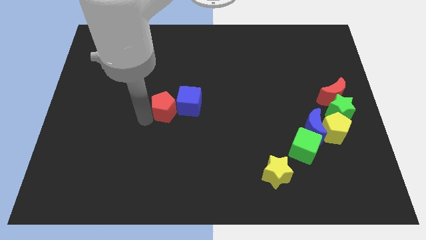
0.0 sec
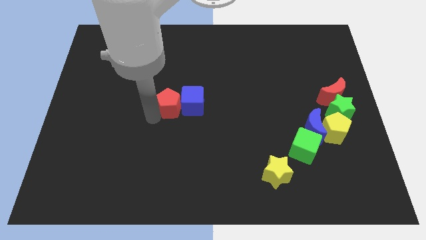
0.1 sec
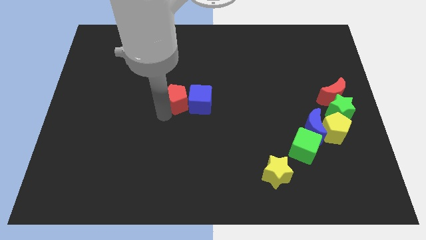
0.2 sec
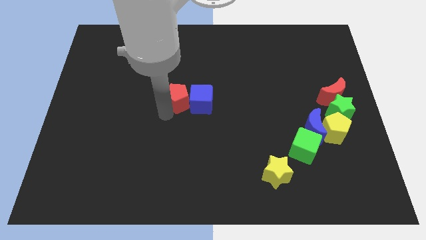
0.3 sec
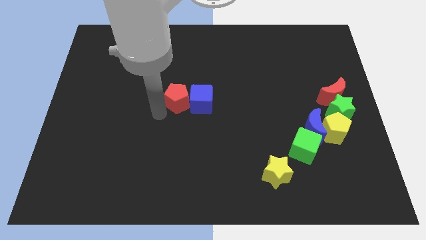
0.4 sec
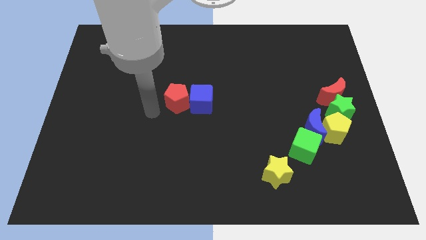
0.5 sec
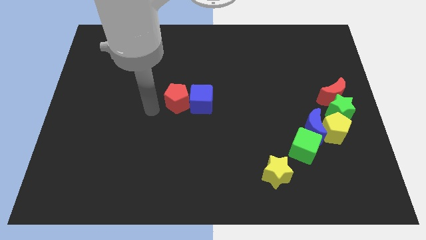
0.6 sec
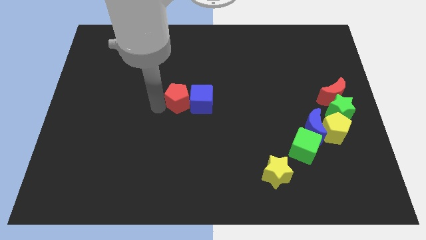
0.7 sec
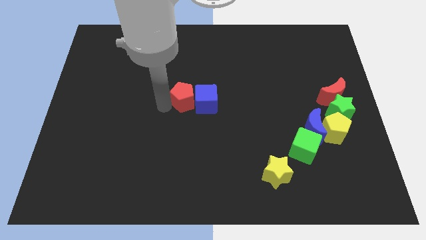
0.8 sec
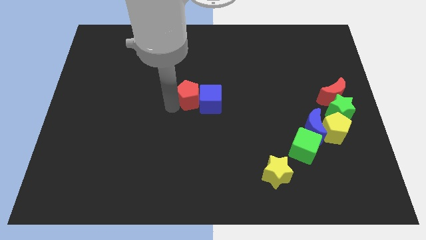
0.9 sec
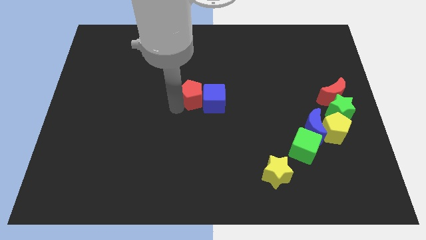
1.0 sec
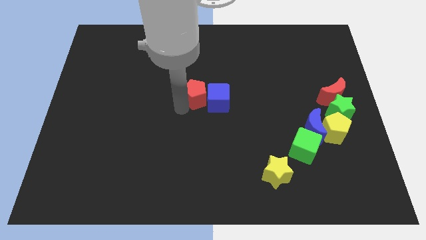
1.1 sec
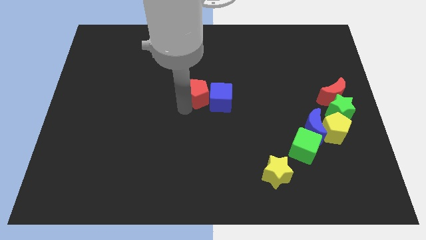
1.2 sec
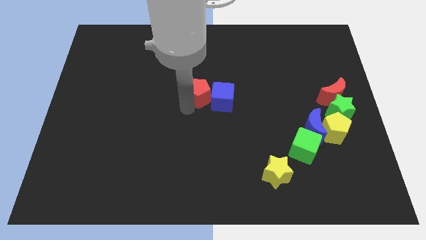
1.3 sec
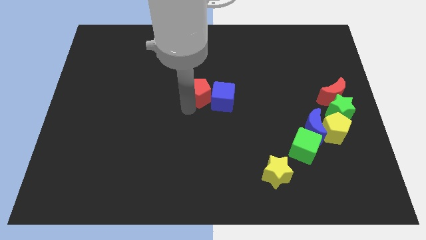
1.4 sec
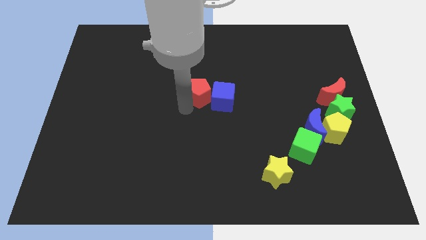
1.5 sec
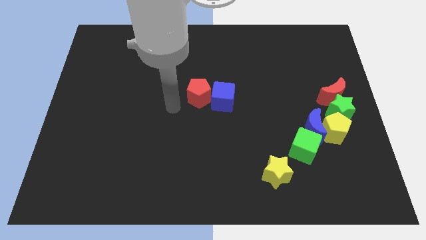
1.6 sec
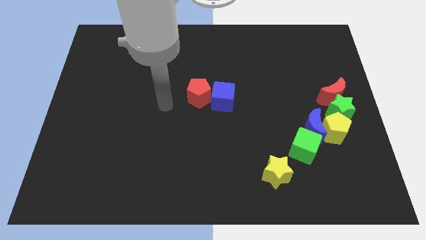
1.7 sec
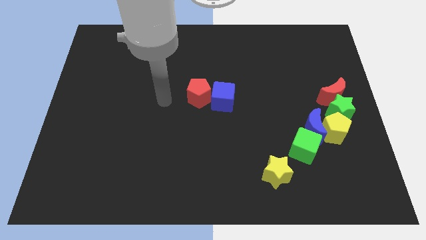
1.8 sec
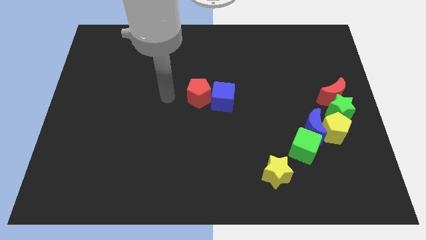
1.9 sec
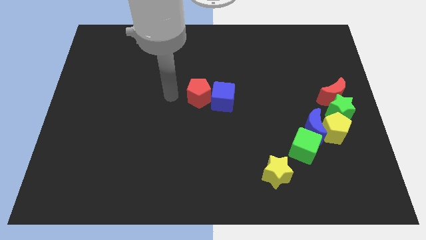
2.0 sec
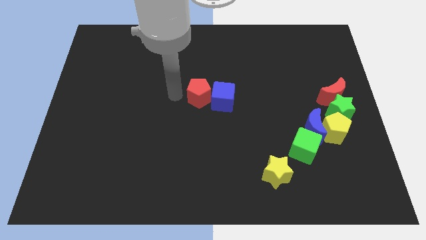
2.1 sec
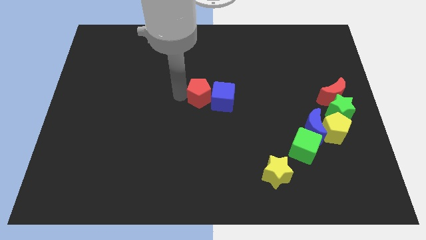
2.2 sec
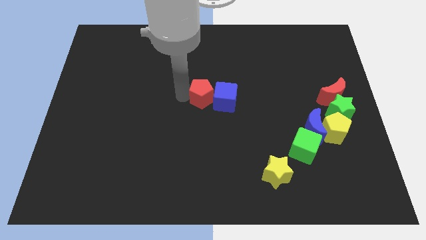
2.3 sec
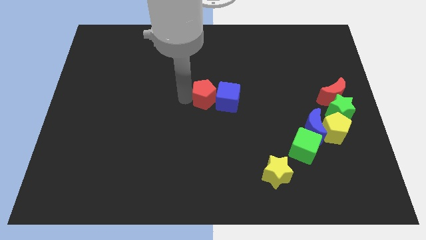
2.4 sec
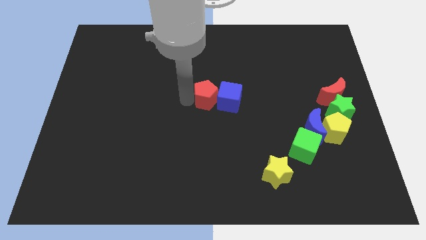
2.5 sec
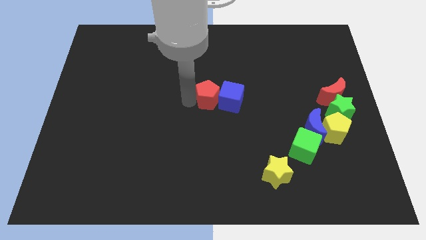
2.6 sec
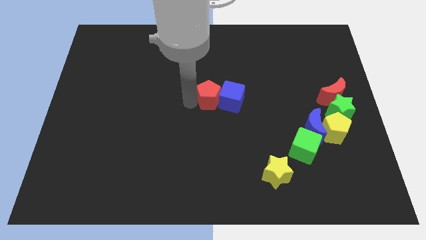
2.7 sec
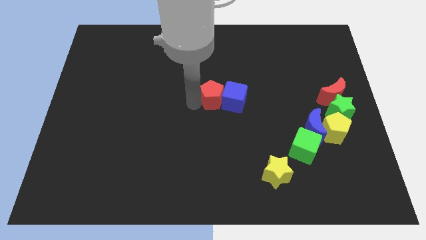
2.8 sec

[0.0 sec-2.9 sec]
move red pentagon along with blue cube to the center

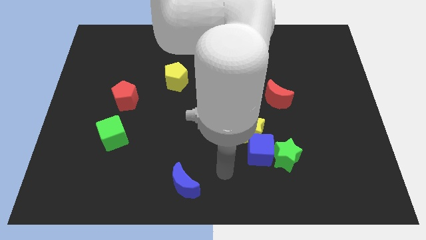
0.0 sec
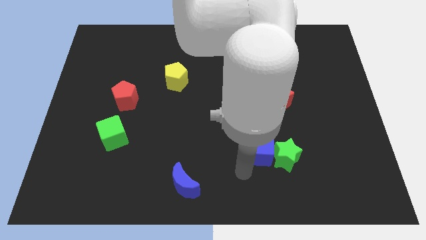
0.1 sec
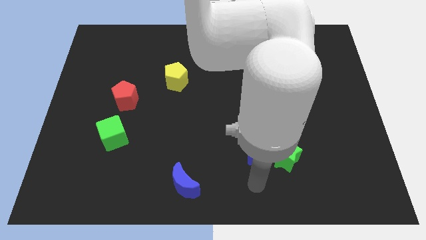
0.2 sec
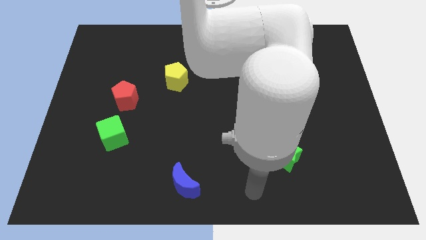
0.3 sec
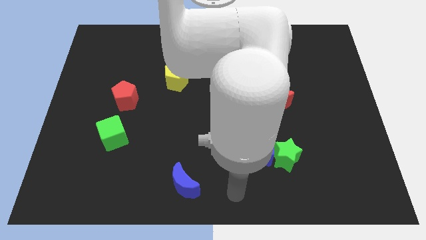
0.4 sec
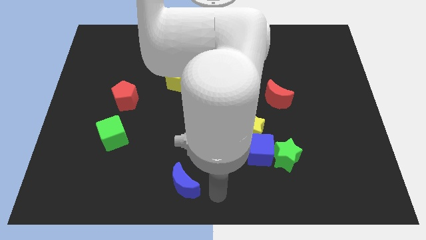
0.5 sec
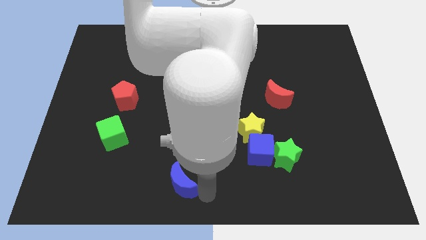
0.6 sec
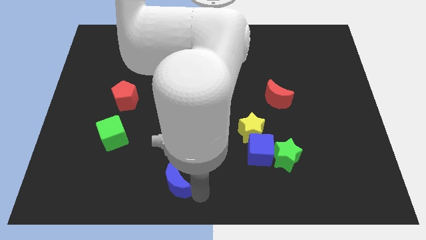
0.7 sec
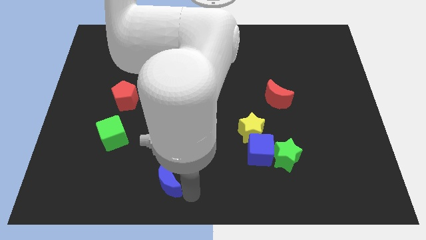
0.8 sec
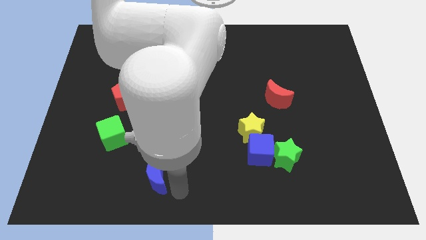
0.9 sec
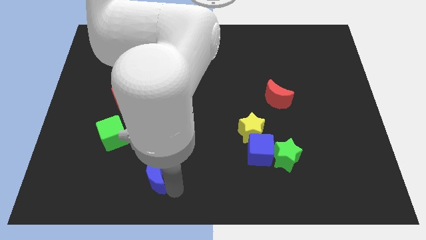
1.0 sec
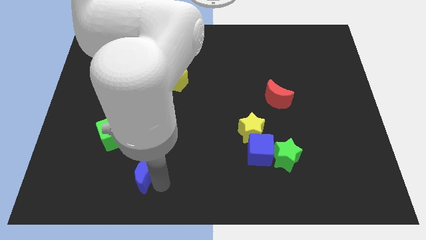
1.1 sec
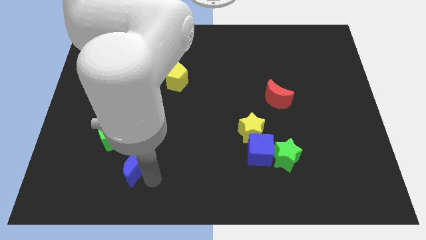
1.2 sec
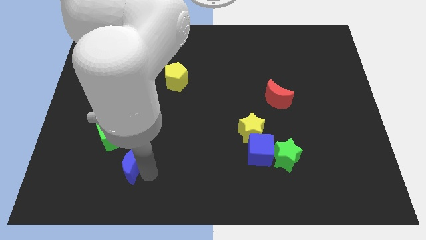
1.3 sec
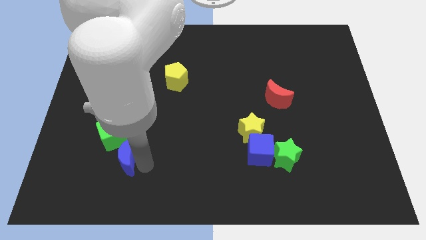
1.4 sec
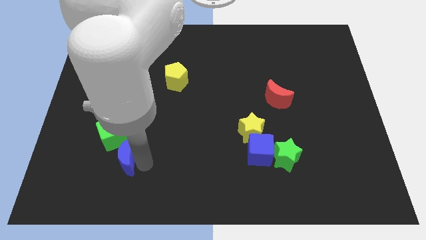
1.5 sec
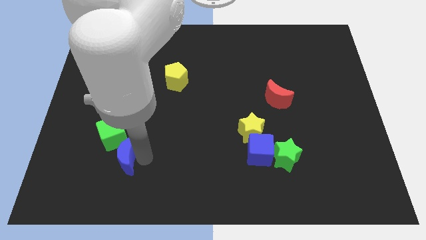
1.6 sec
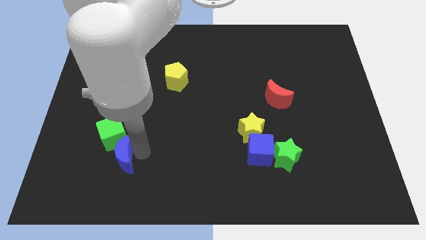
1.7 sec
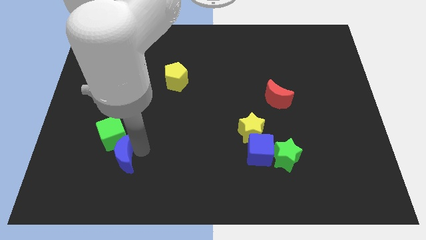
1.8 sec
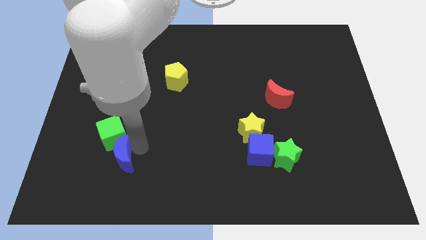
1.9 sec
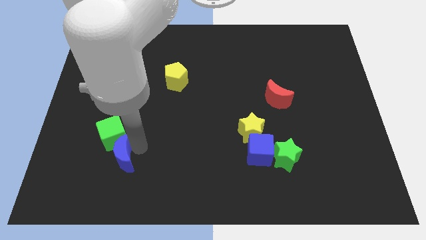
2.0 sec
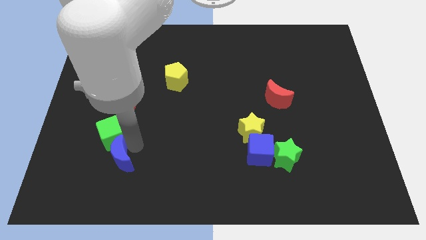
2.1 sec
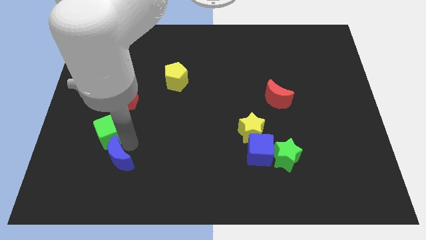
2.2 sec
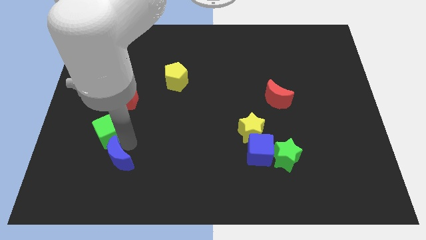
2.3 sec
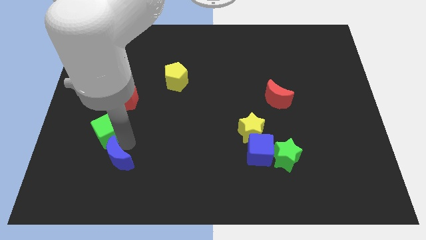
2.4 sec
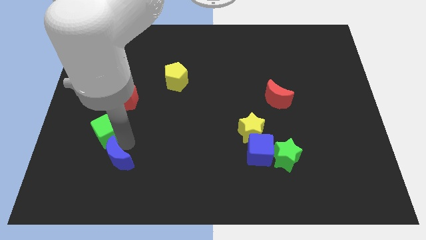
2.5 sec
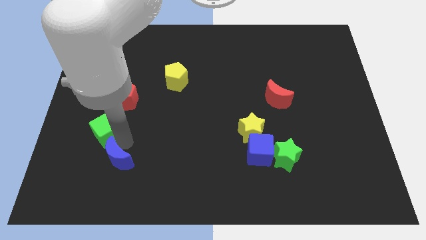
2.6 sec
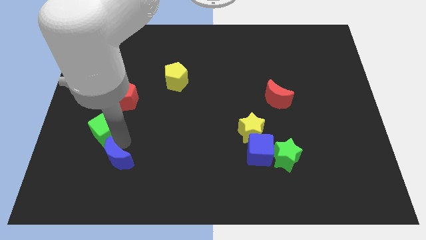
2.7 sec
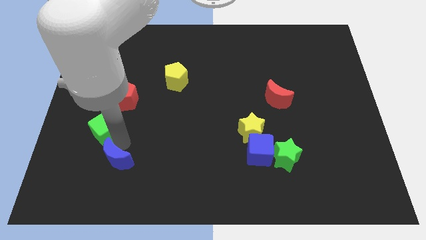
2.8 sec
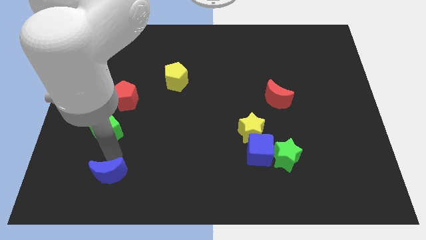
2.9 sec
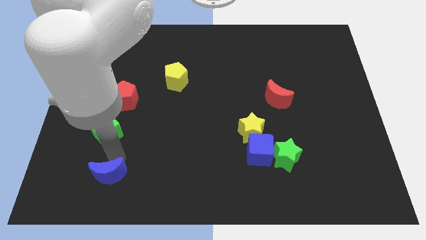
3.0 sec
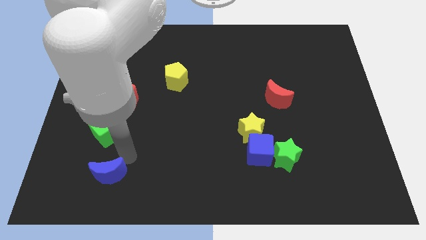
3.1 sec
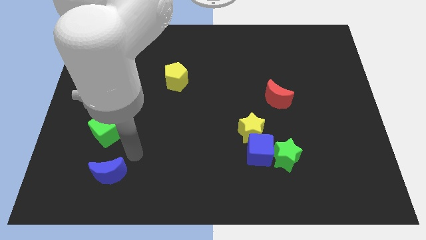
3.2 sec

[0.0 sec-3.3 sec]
push the blue crescent to the bottom of the green cube

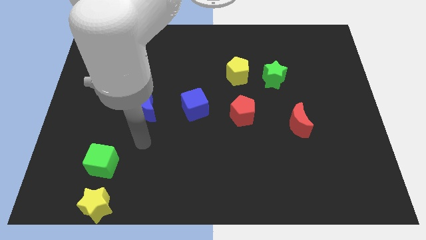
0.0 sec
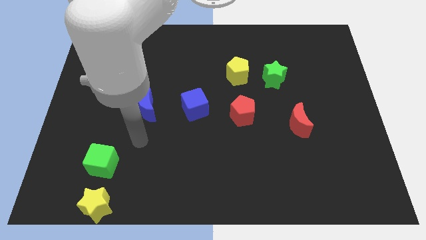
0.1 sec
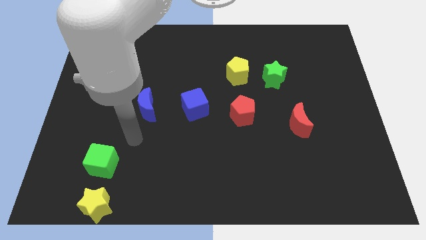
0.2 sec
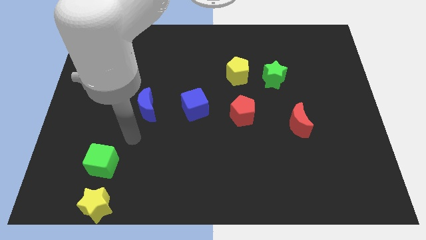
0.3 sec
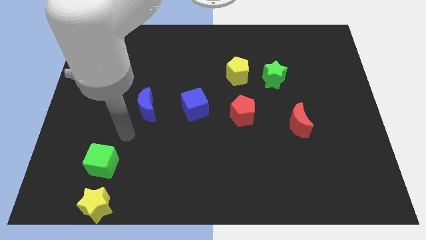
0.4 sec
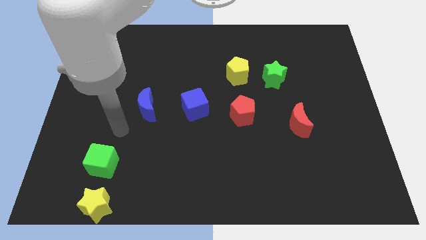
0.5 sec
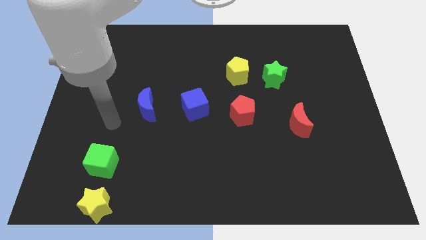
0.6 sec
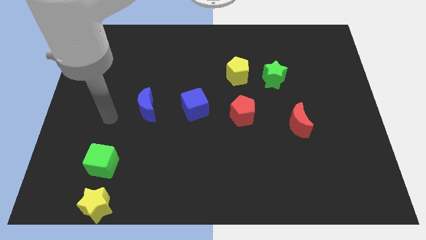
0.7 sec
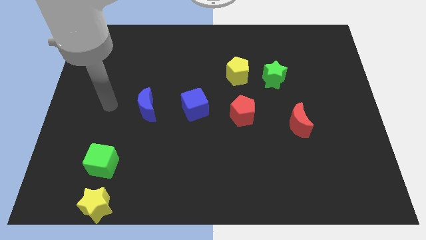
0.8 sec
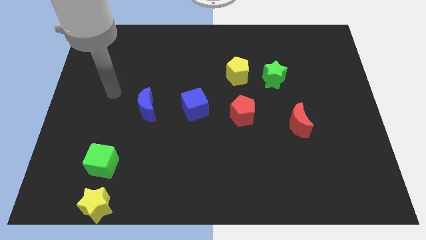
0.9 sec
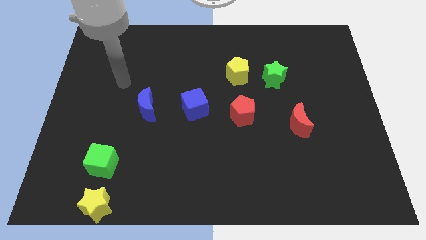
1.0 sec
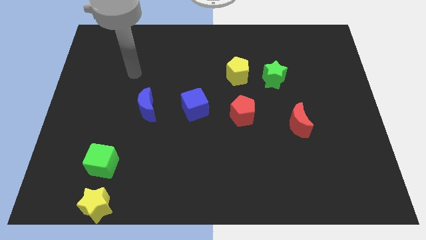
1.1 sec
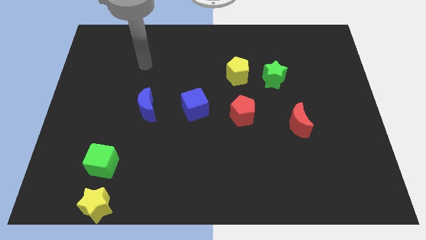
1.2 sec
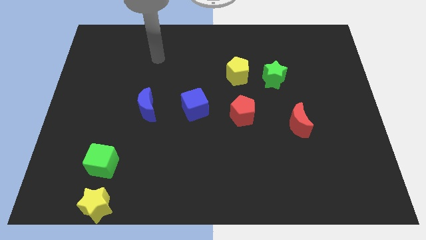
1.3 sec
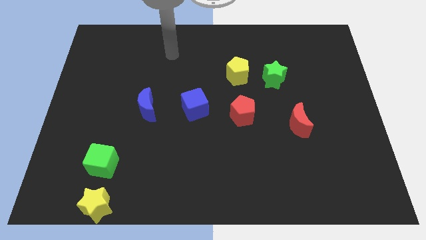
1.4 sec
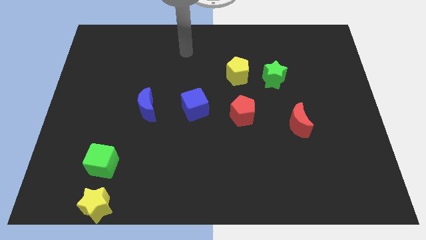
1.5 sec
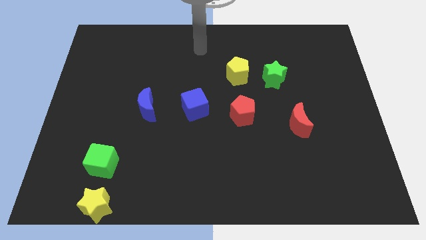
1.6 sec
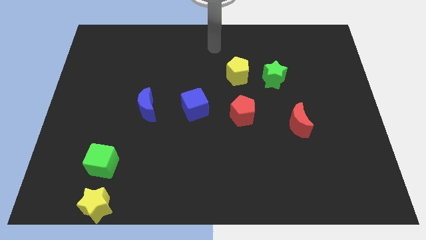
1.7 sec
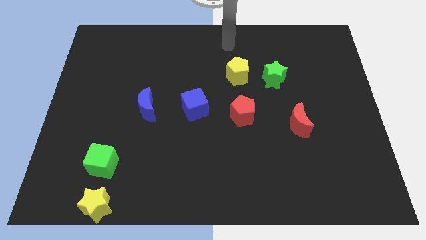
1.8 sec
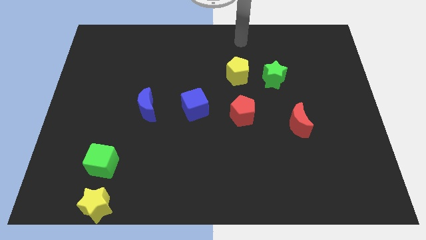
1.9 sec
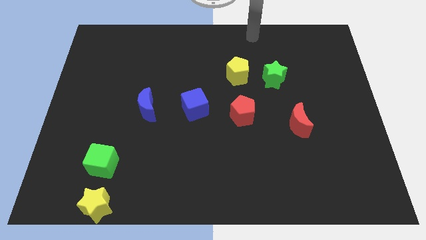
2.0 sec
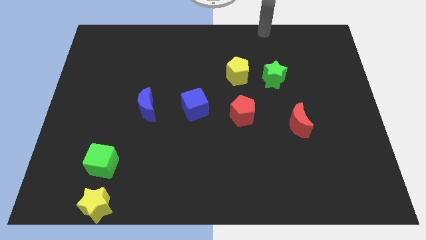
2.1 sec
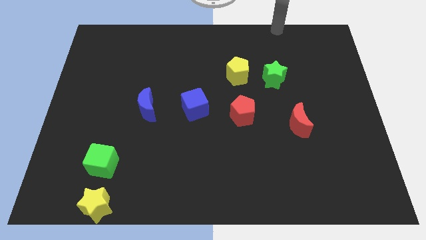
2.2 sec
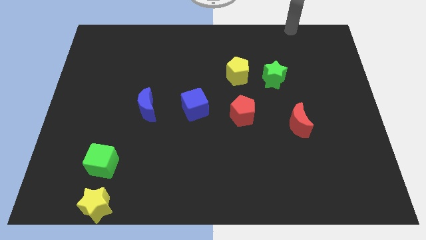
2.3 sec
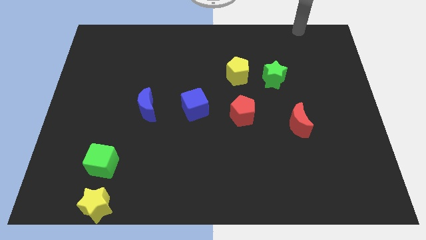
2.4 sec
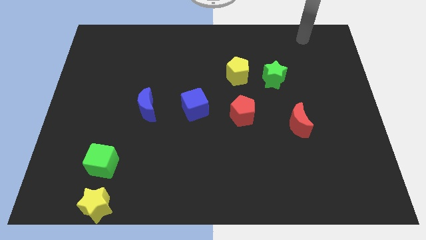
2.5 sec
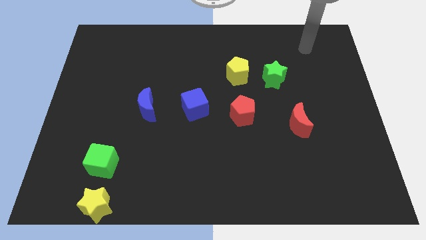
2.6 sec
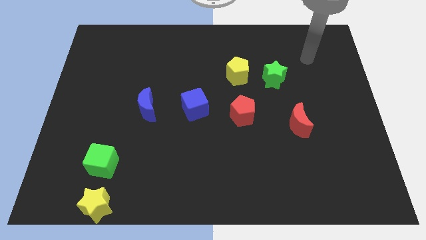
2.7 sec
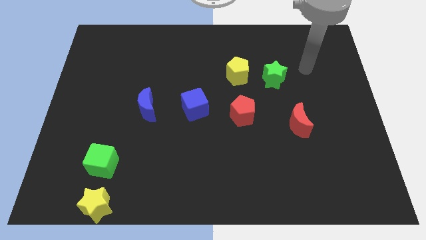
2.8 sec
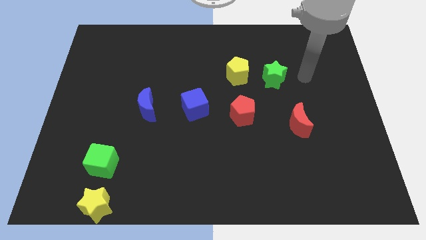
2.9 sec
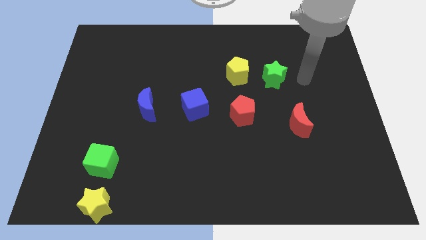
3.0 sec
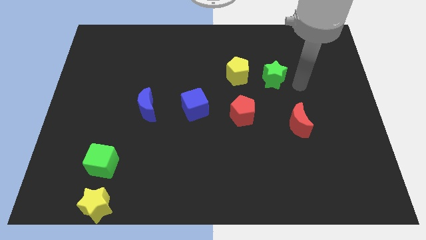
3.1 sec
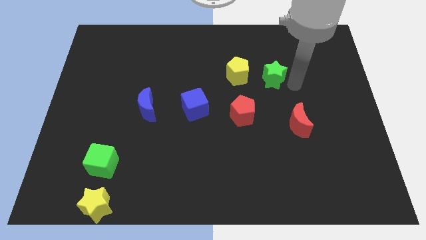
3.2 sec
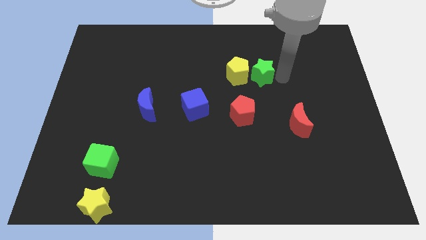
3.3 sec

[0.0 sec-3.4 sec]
push the green star into the yellow pentagon
